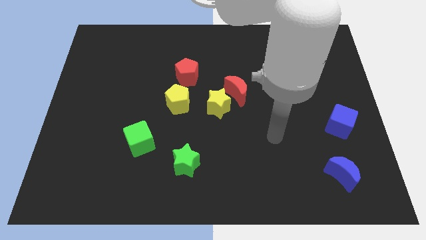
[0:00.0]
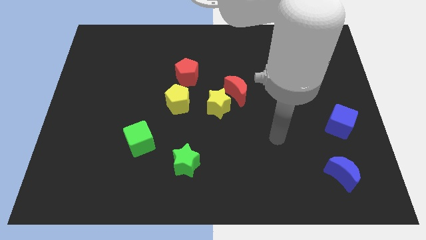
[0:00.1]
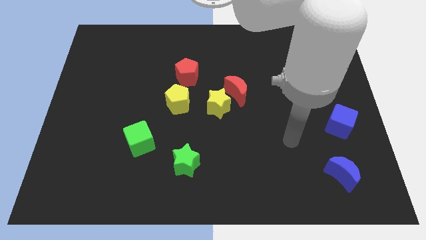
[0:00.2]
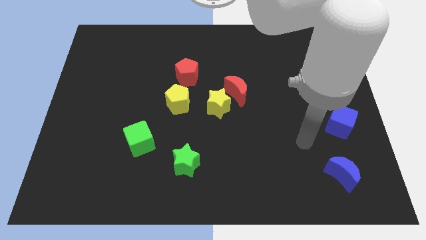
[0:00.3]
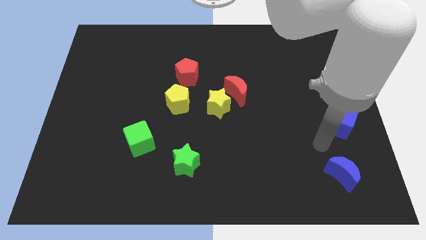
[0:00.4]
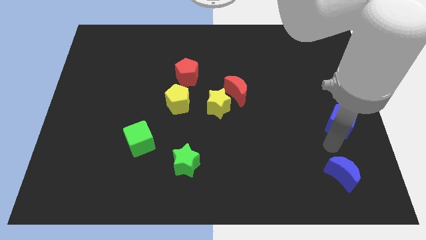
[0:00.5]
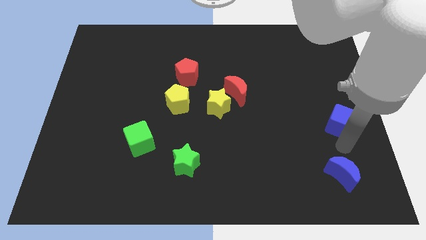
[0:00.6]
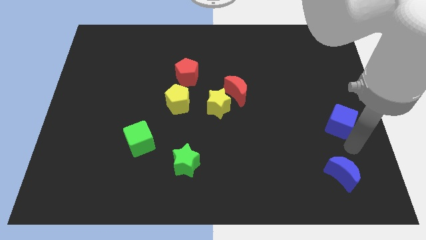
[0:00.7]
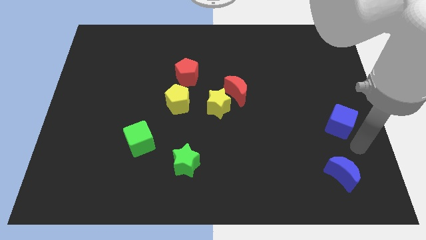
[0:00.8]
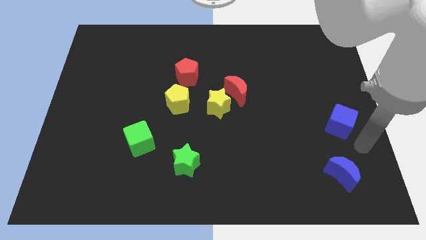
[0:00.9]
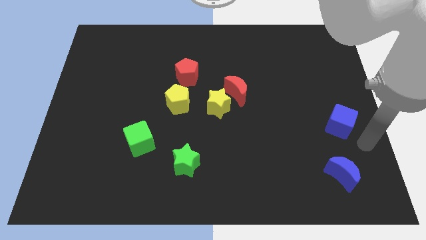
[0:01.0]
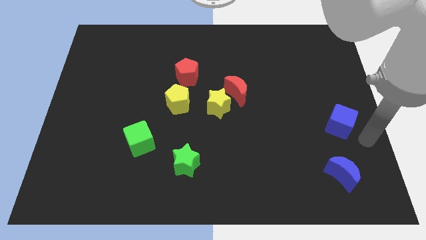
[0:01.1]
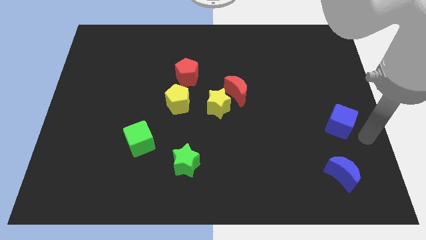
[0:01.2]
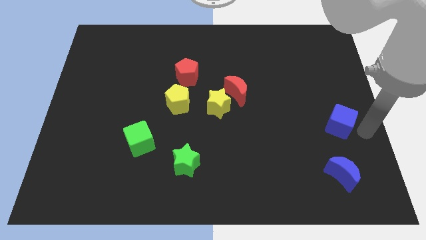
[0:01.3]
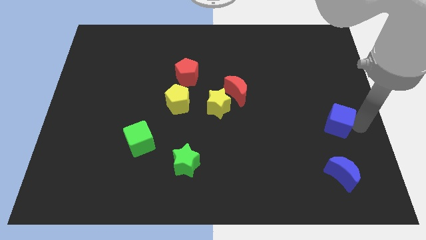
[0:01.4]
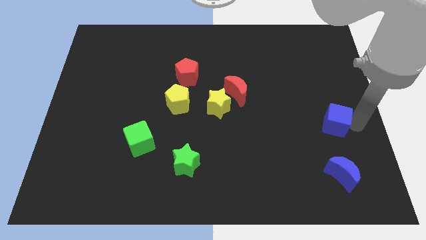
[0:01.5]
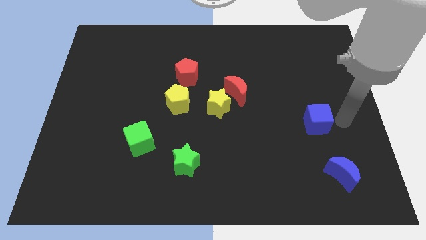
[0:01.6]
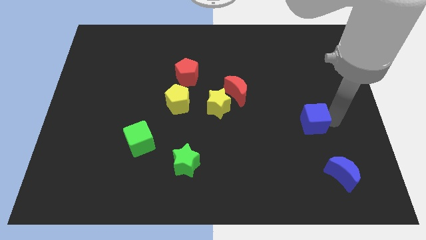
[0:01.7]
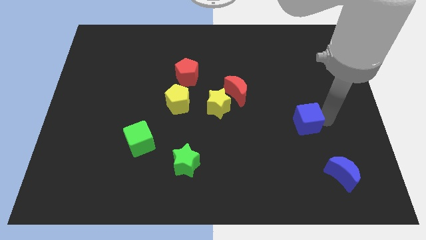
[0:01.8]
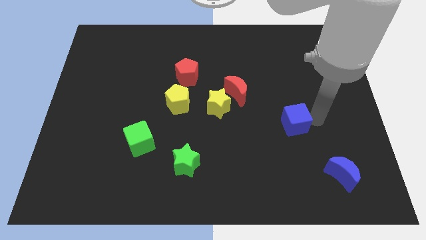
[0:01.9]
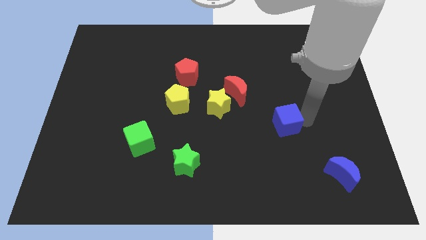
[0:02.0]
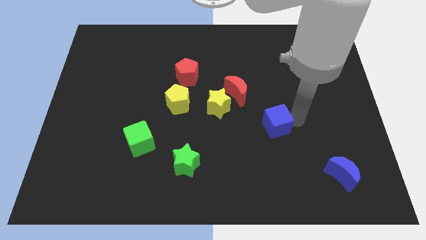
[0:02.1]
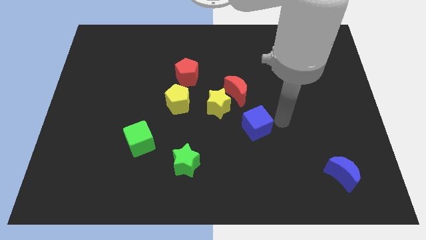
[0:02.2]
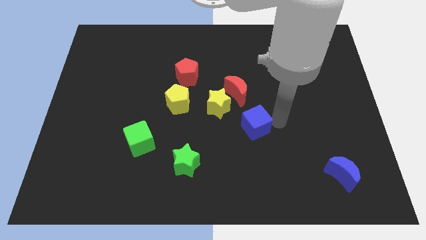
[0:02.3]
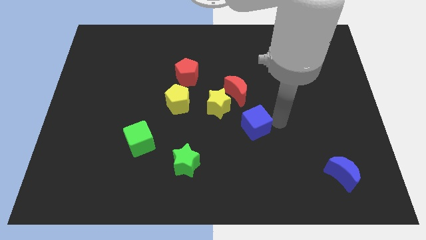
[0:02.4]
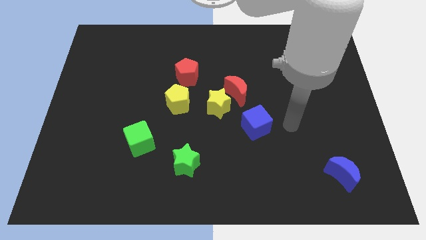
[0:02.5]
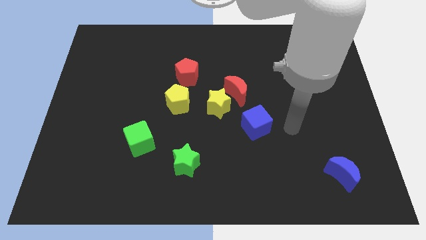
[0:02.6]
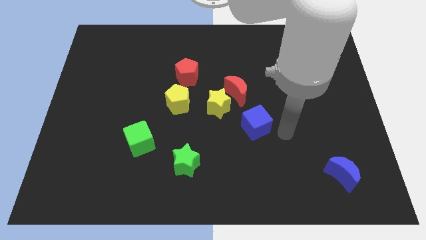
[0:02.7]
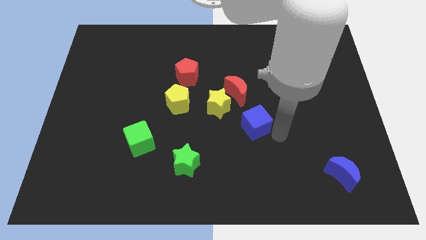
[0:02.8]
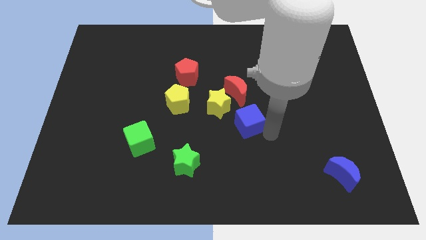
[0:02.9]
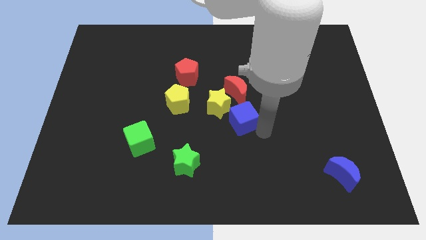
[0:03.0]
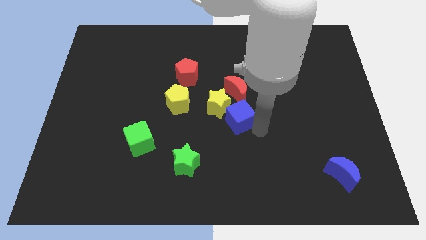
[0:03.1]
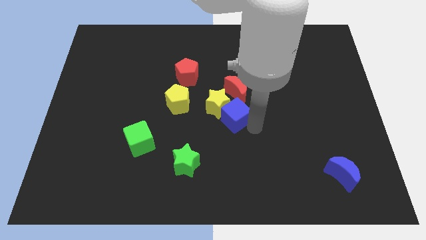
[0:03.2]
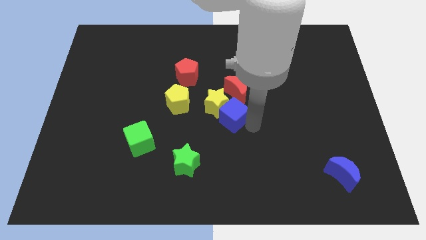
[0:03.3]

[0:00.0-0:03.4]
move the blue cube towards the yellow star

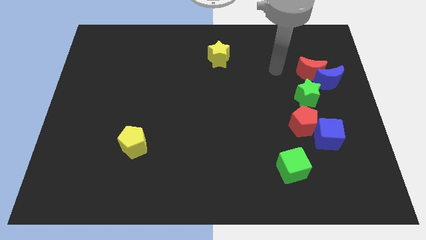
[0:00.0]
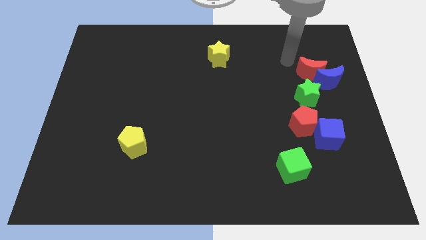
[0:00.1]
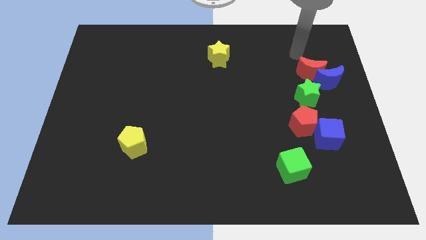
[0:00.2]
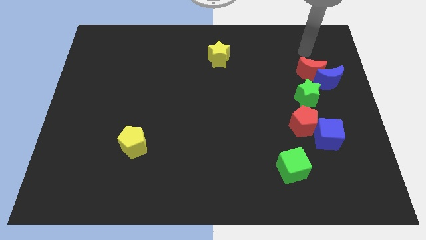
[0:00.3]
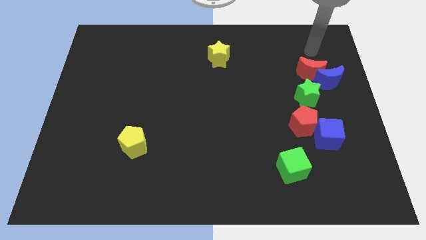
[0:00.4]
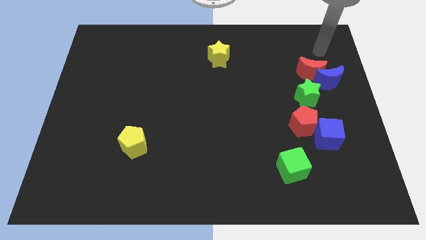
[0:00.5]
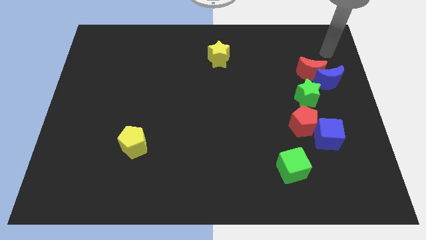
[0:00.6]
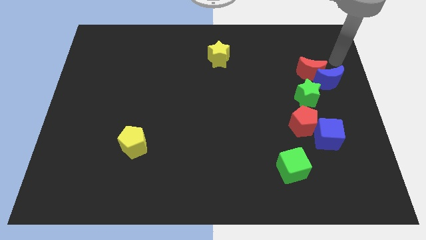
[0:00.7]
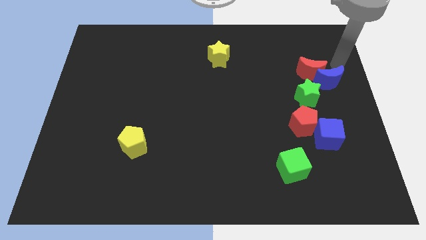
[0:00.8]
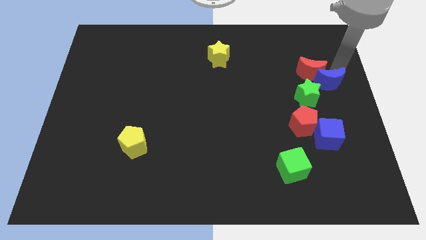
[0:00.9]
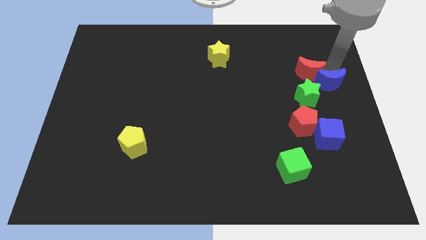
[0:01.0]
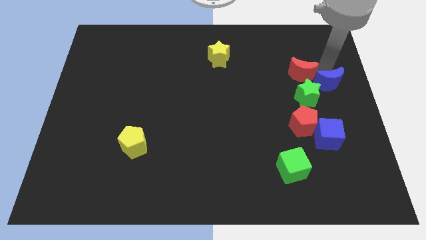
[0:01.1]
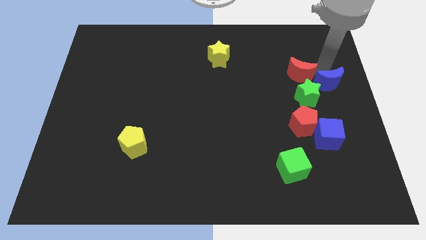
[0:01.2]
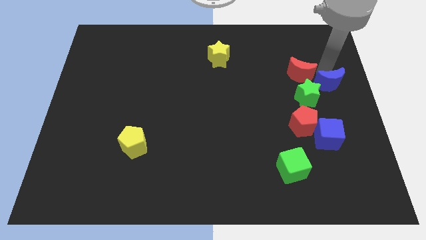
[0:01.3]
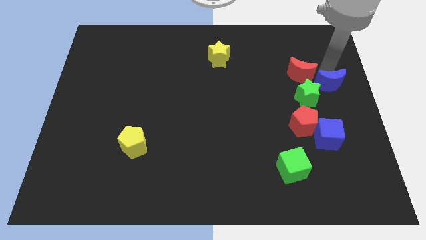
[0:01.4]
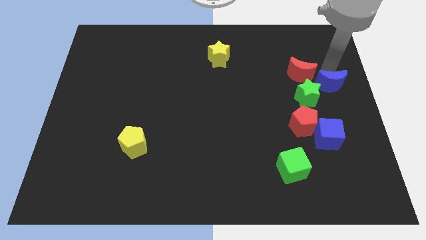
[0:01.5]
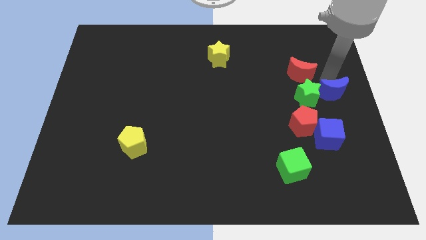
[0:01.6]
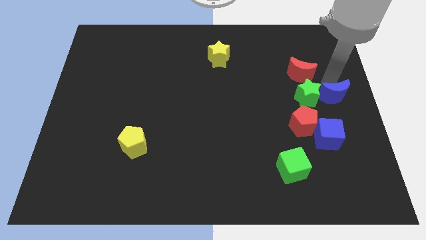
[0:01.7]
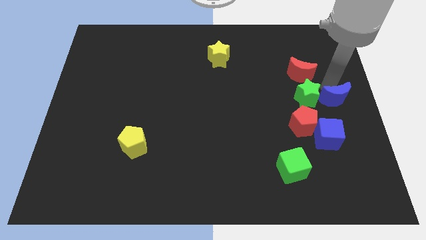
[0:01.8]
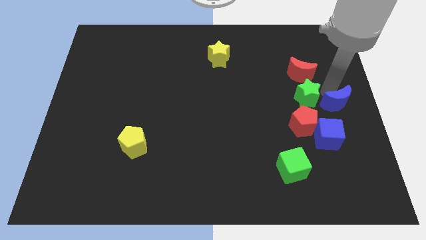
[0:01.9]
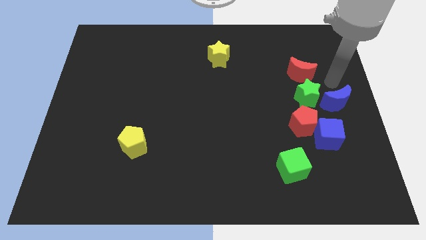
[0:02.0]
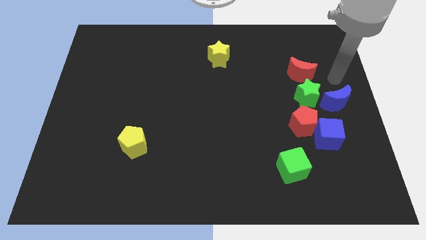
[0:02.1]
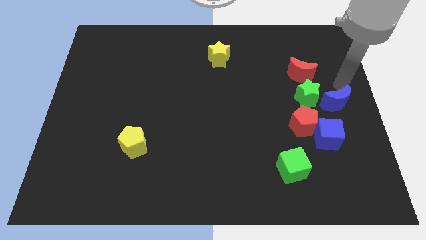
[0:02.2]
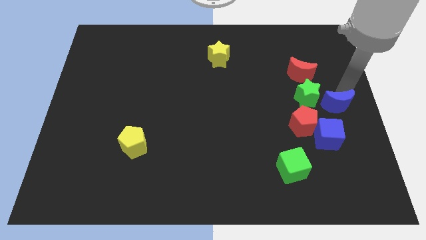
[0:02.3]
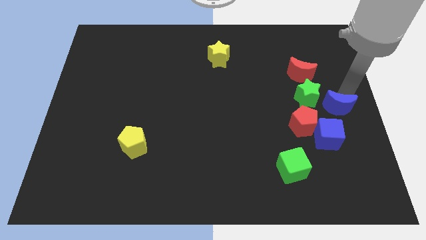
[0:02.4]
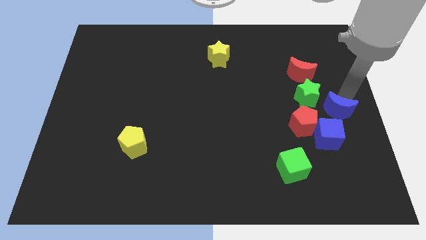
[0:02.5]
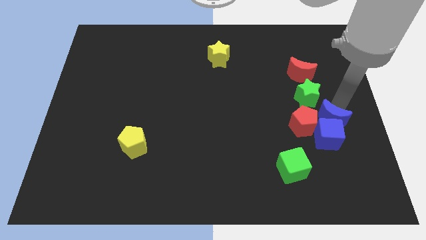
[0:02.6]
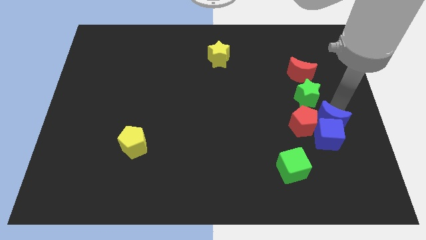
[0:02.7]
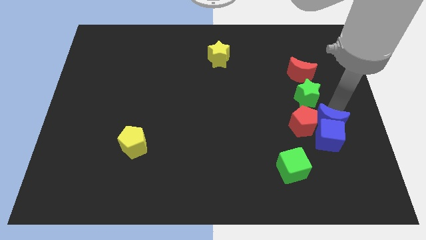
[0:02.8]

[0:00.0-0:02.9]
move the blue moon close to the blue cube

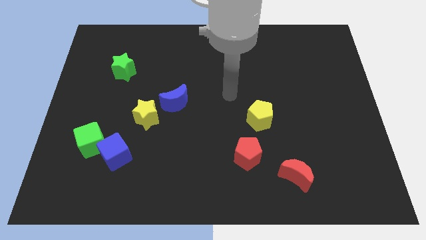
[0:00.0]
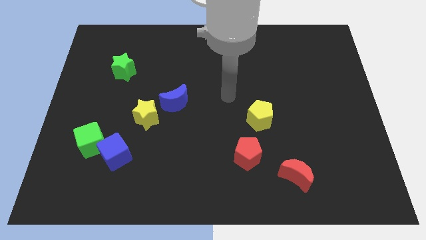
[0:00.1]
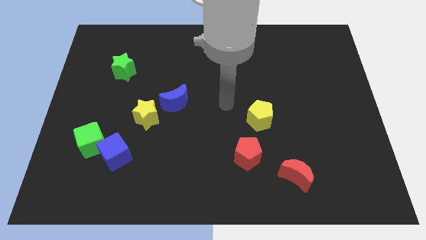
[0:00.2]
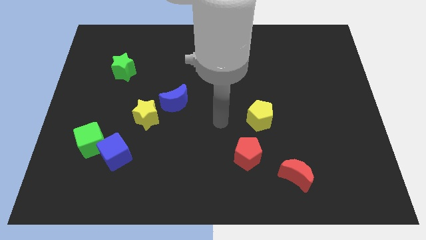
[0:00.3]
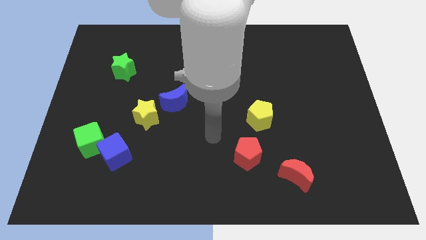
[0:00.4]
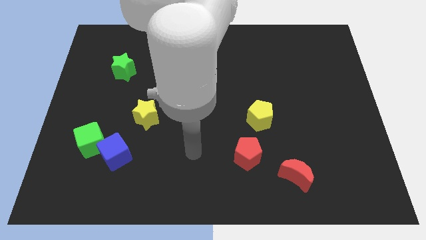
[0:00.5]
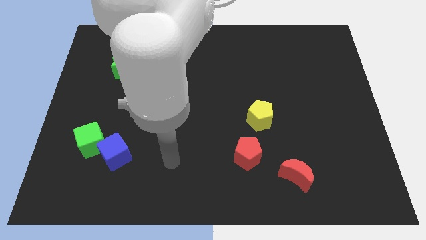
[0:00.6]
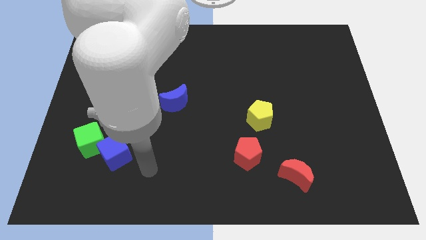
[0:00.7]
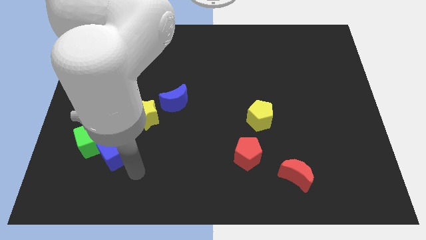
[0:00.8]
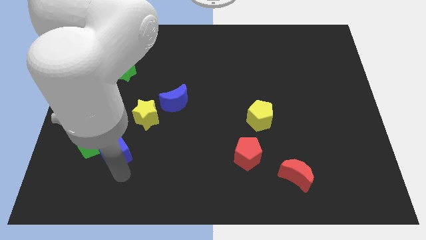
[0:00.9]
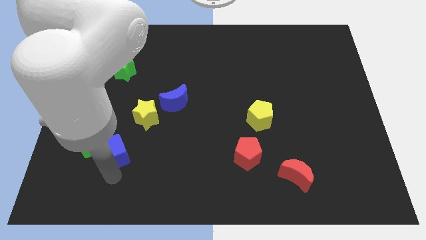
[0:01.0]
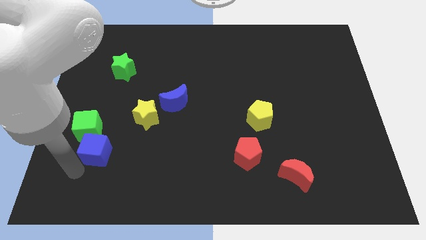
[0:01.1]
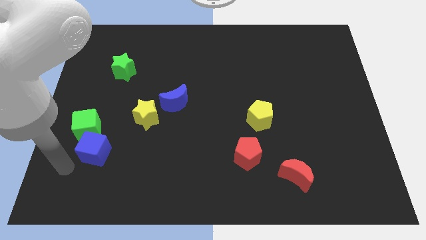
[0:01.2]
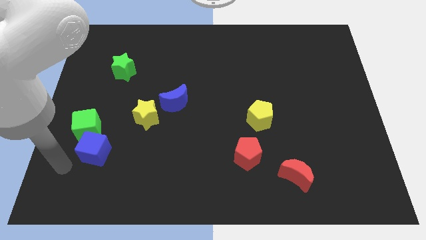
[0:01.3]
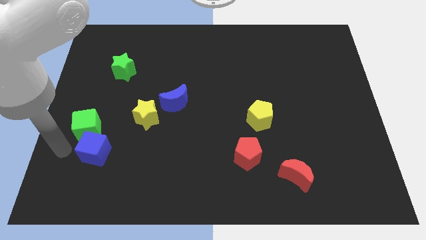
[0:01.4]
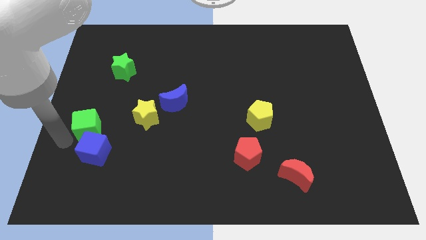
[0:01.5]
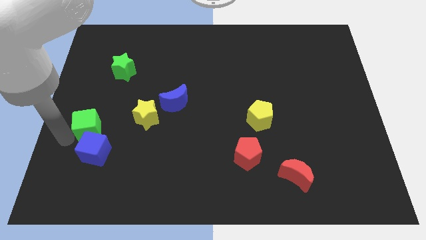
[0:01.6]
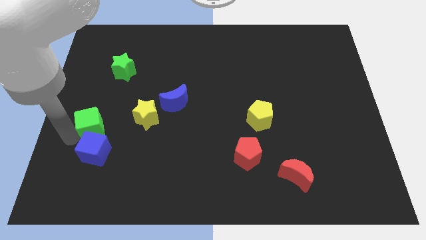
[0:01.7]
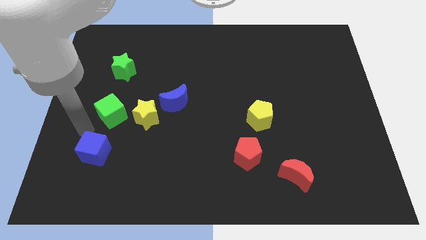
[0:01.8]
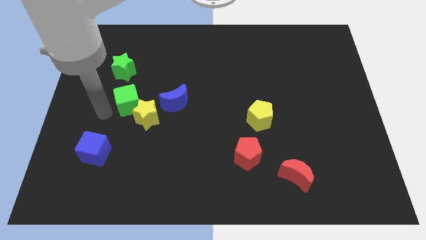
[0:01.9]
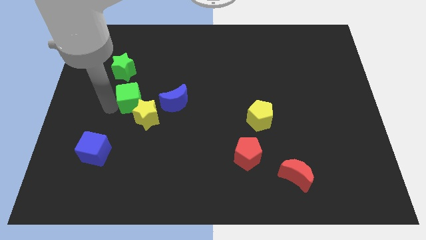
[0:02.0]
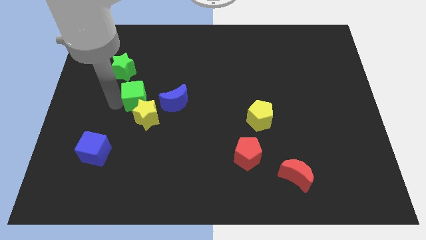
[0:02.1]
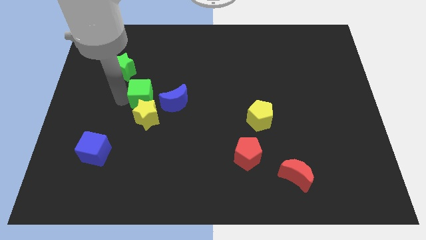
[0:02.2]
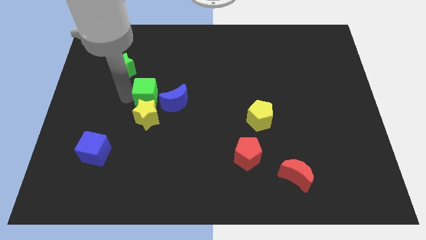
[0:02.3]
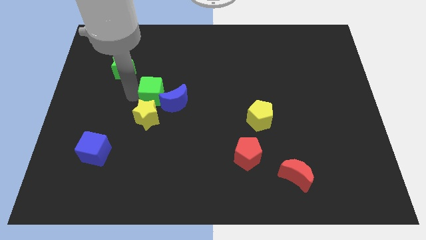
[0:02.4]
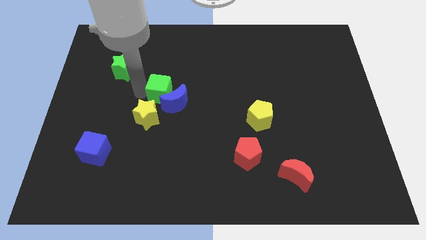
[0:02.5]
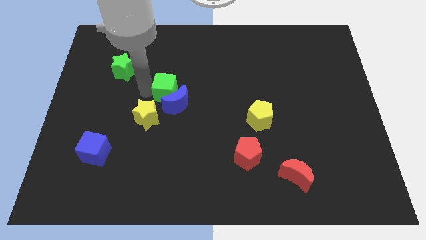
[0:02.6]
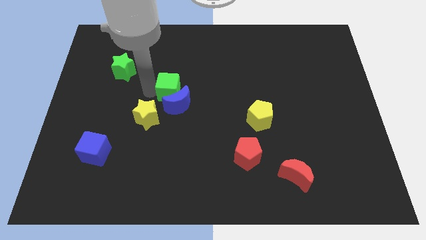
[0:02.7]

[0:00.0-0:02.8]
put the green cube close to the blue moon
